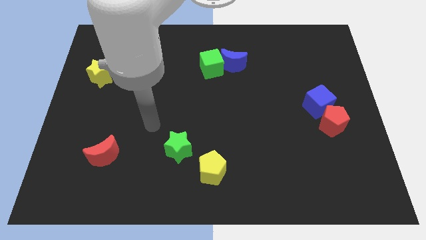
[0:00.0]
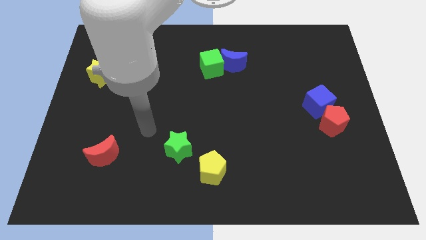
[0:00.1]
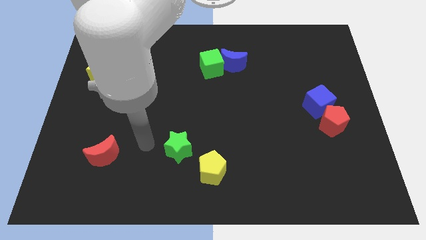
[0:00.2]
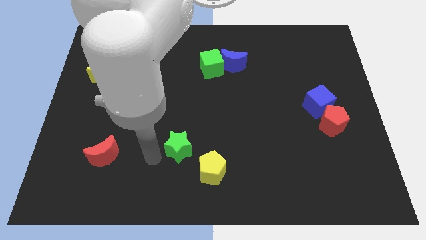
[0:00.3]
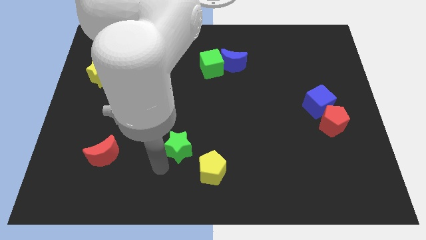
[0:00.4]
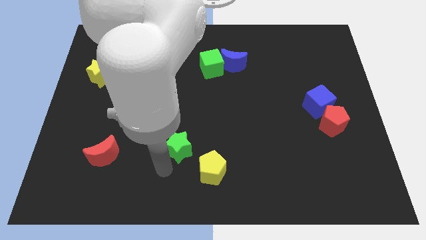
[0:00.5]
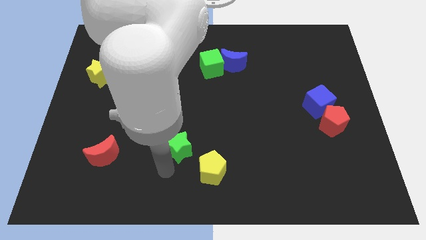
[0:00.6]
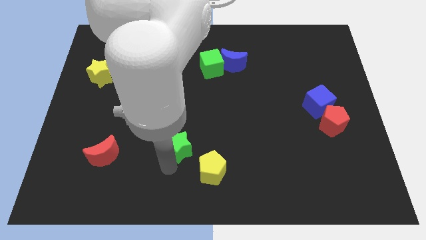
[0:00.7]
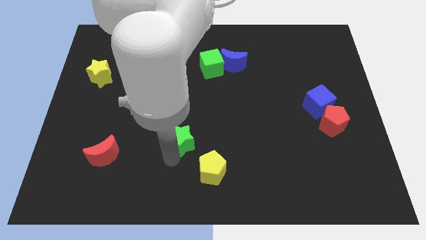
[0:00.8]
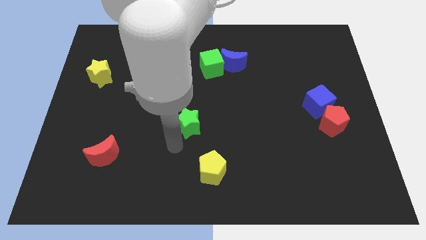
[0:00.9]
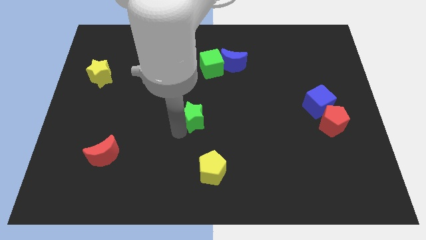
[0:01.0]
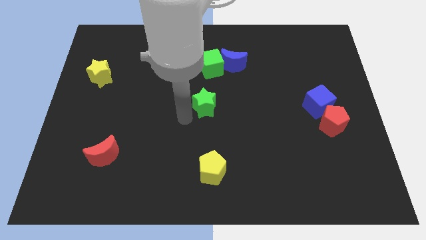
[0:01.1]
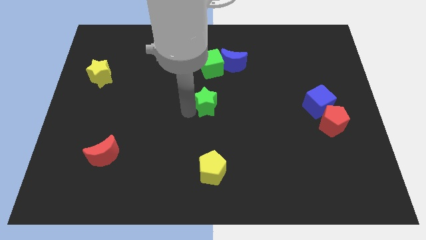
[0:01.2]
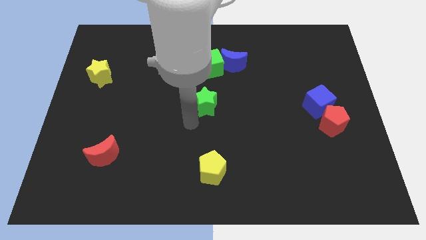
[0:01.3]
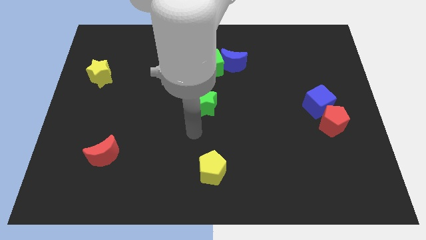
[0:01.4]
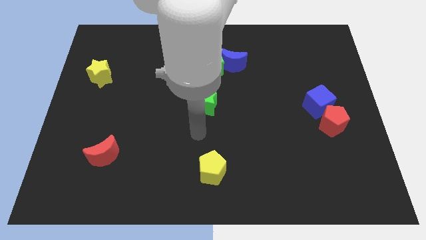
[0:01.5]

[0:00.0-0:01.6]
push the green star closer to the green cube

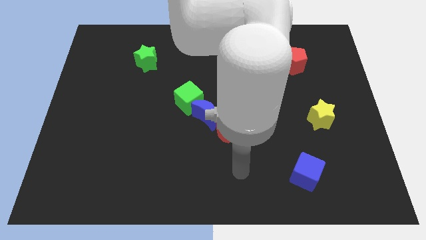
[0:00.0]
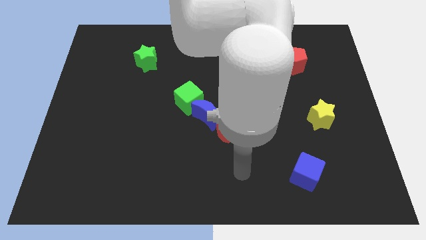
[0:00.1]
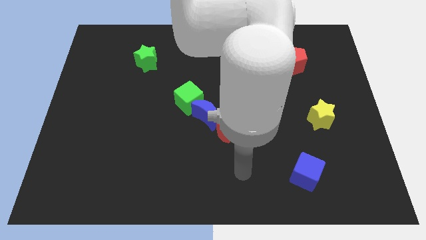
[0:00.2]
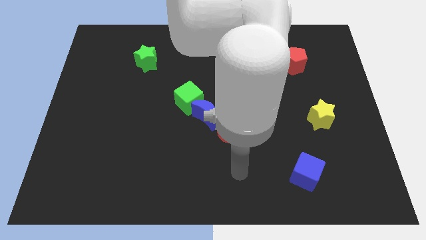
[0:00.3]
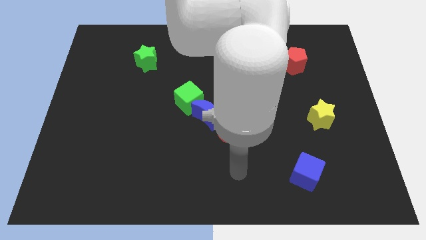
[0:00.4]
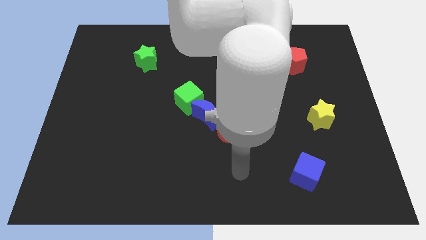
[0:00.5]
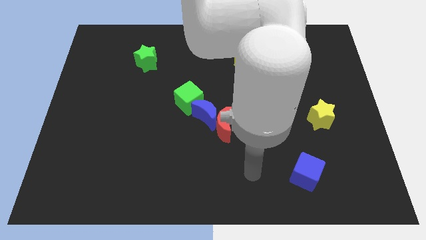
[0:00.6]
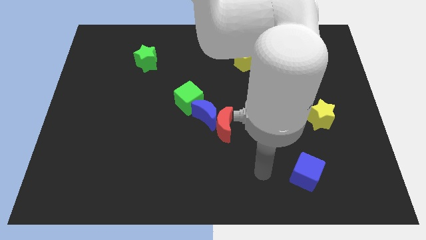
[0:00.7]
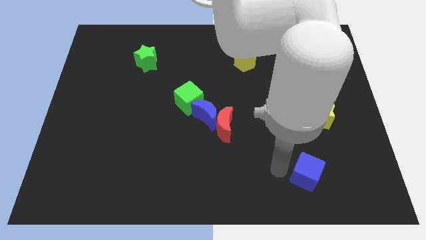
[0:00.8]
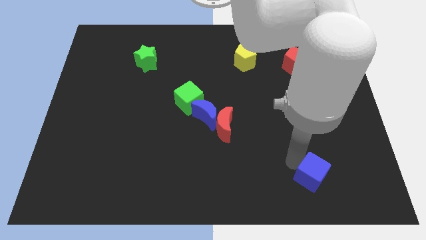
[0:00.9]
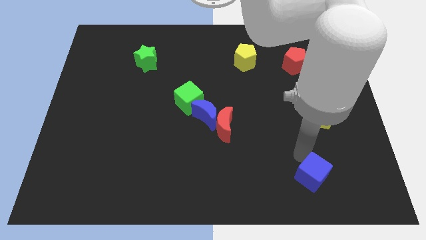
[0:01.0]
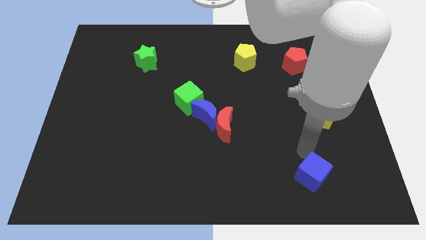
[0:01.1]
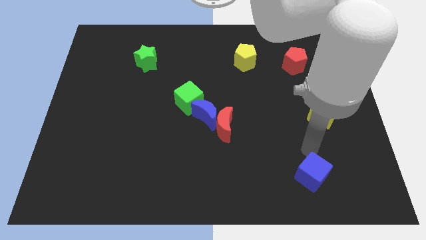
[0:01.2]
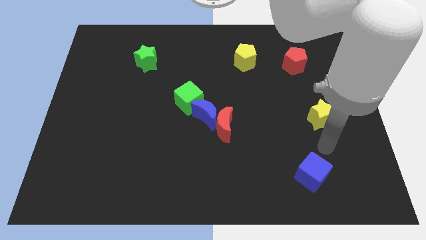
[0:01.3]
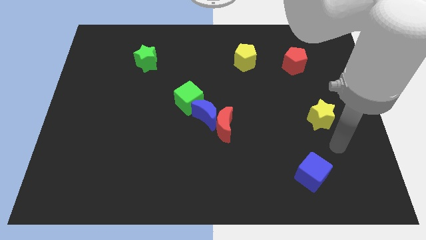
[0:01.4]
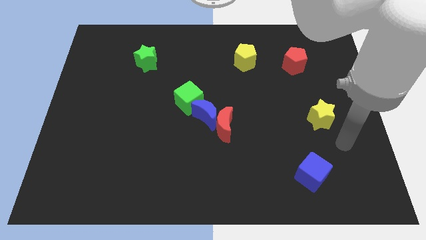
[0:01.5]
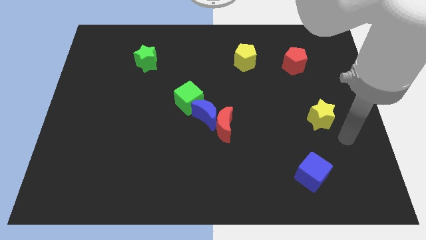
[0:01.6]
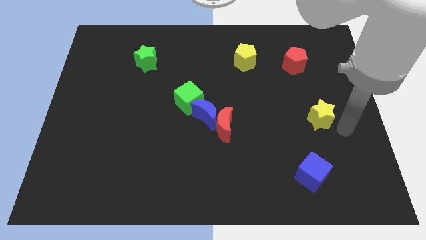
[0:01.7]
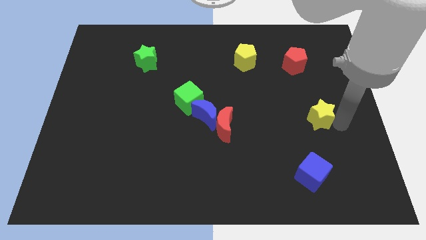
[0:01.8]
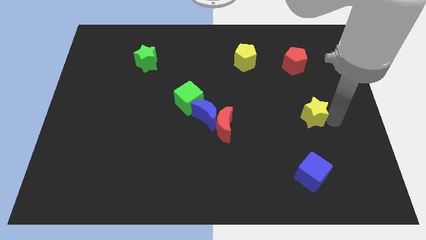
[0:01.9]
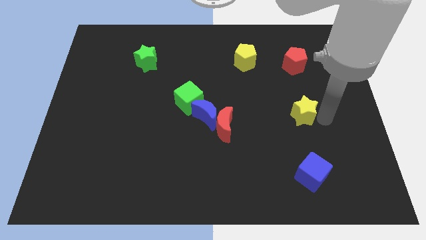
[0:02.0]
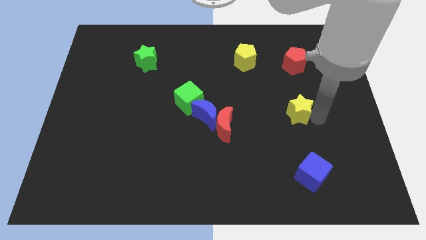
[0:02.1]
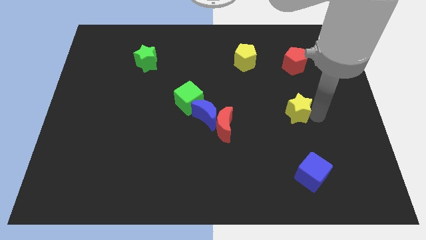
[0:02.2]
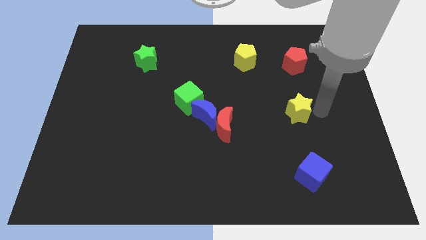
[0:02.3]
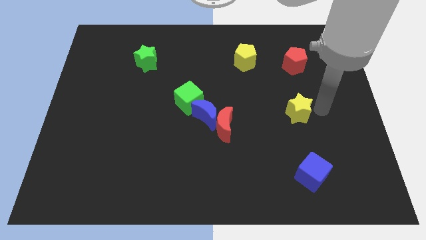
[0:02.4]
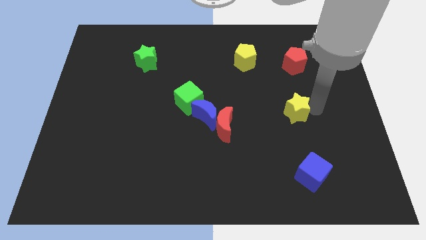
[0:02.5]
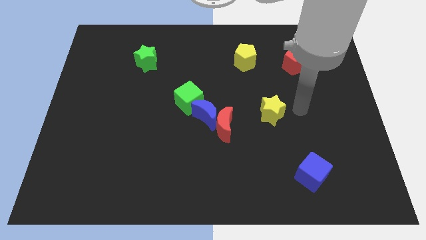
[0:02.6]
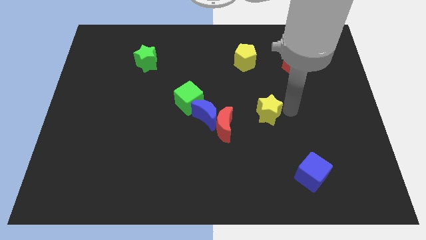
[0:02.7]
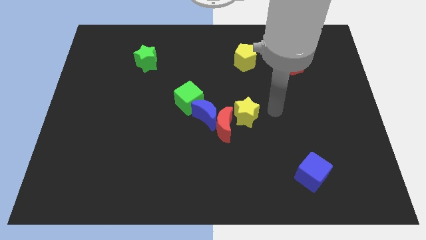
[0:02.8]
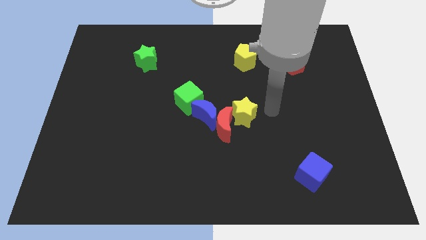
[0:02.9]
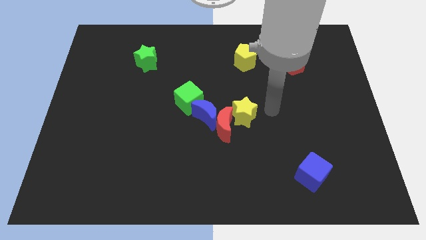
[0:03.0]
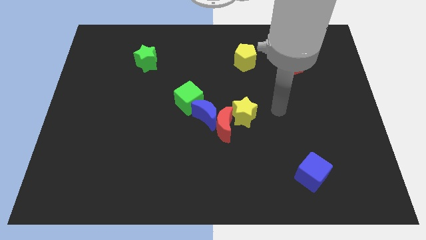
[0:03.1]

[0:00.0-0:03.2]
move the blue cube slightly towards right

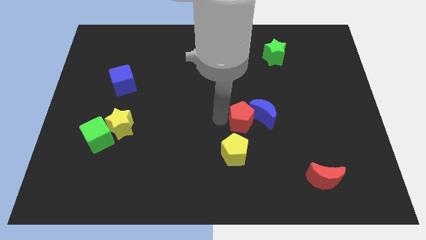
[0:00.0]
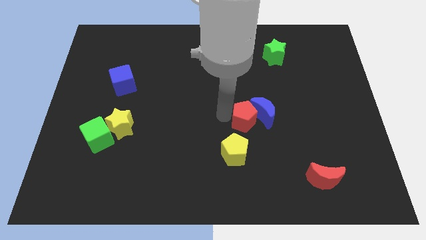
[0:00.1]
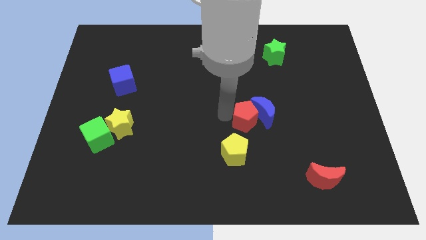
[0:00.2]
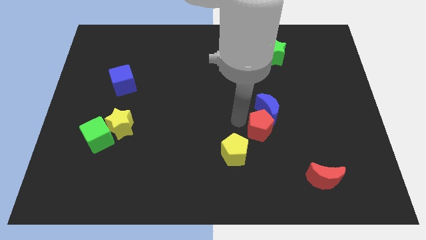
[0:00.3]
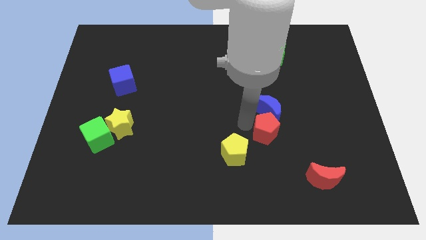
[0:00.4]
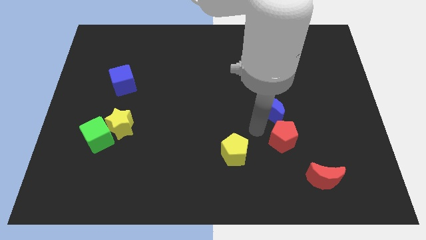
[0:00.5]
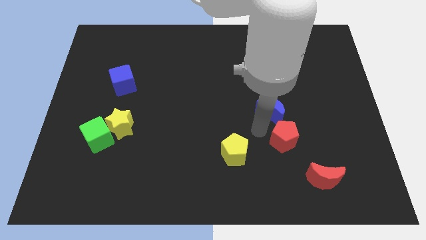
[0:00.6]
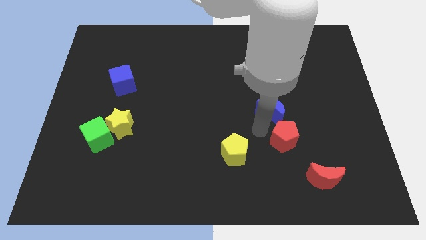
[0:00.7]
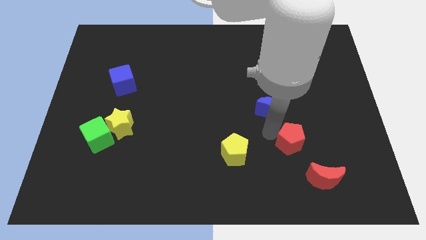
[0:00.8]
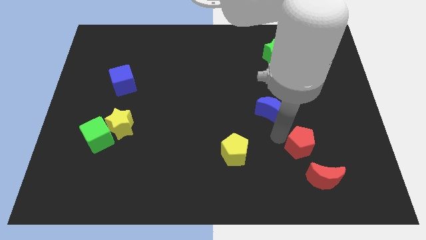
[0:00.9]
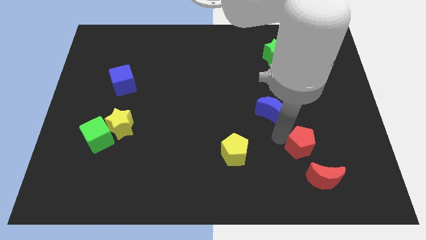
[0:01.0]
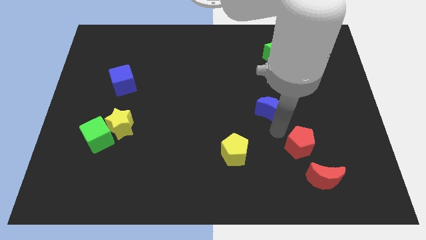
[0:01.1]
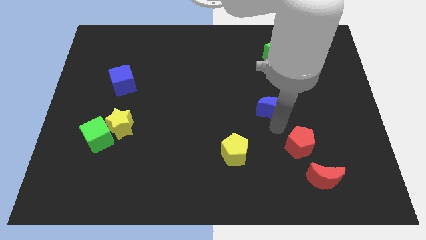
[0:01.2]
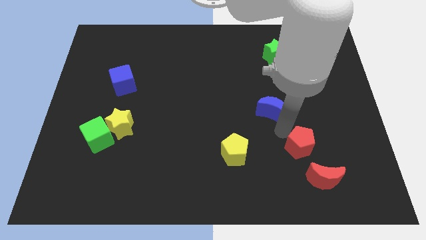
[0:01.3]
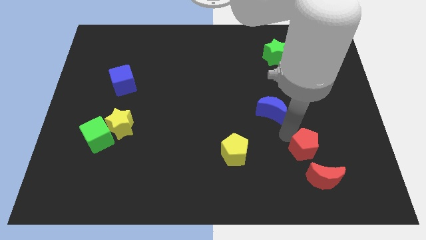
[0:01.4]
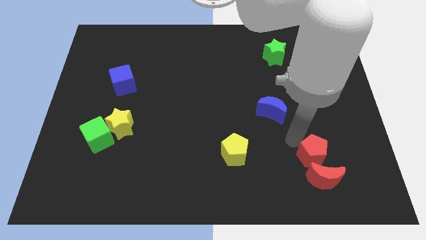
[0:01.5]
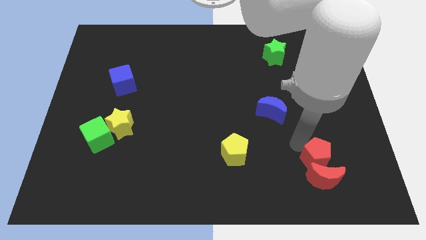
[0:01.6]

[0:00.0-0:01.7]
push the red crescent to the bottom of the red pentagon

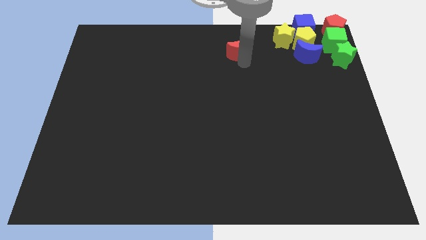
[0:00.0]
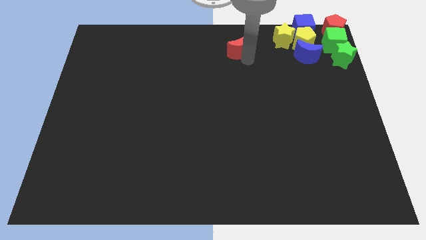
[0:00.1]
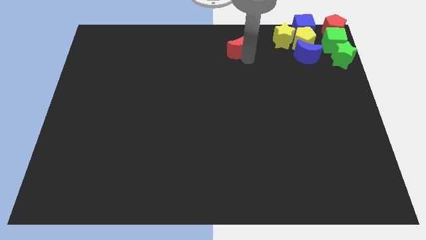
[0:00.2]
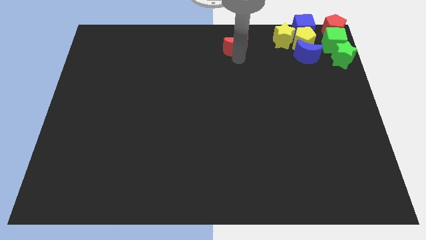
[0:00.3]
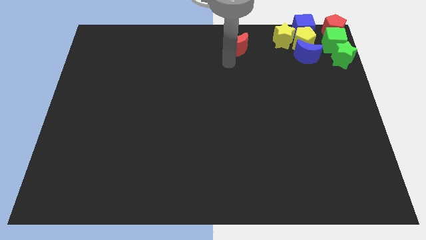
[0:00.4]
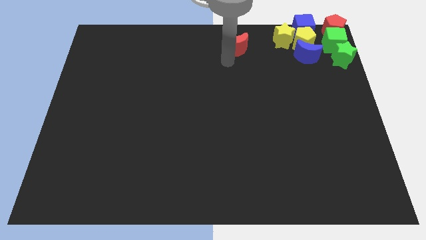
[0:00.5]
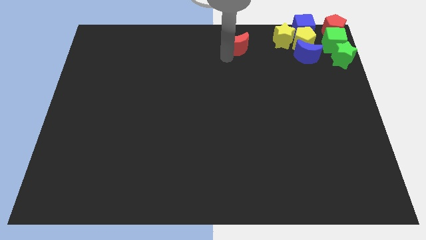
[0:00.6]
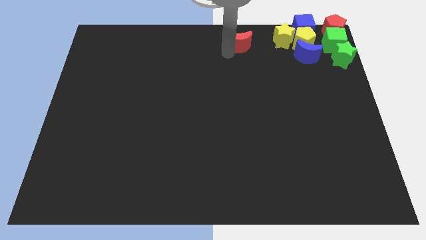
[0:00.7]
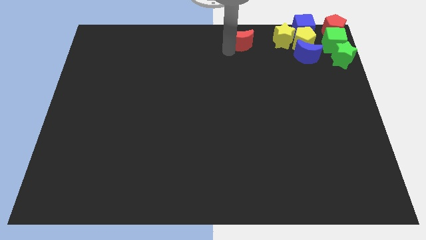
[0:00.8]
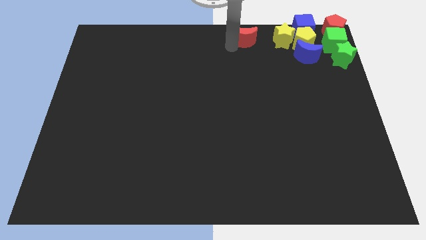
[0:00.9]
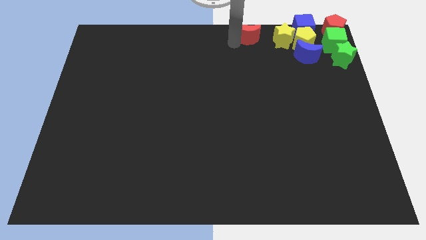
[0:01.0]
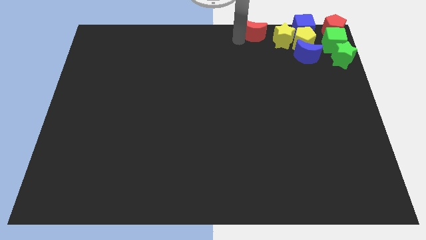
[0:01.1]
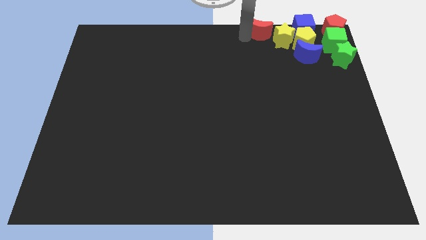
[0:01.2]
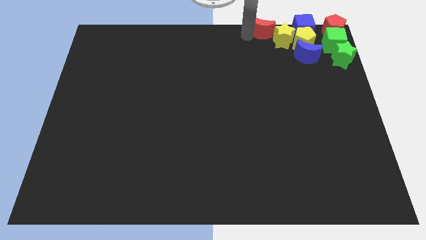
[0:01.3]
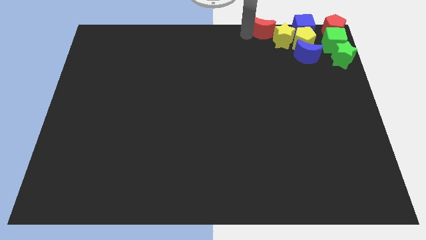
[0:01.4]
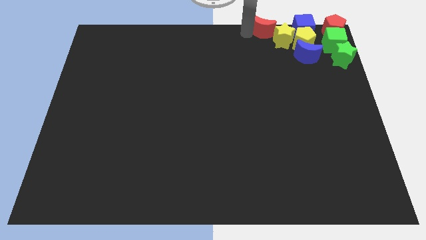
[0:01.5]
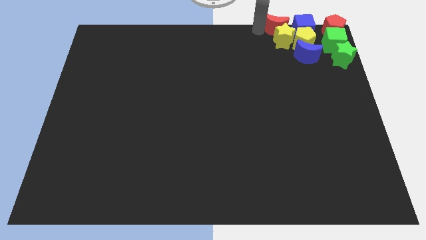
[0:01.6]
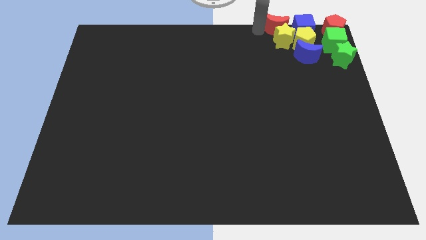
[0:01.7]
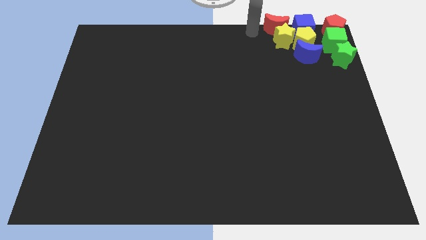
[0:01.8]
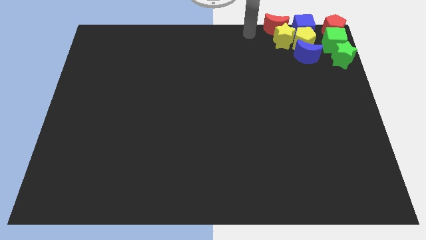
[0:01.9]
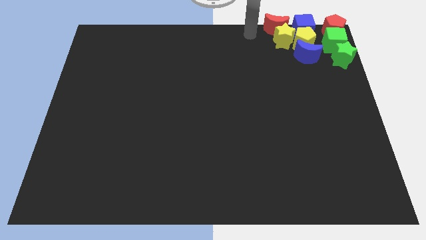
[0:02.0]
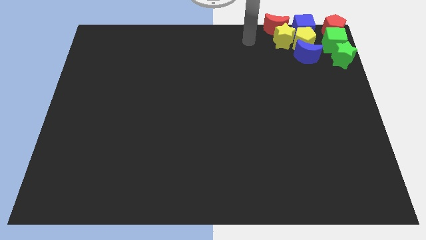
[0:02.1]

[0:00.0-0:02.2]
drag the red moon to the top of the yellow pentagon to form a group of blocks

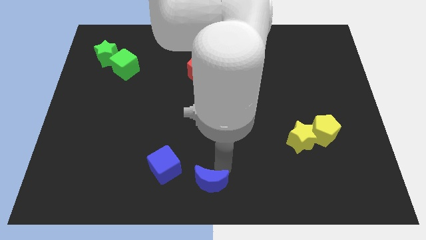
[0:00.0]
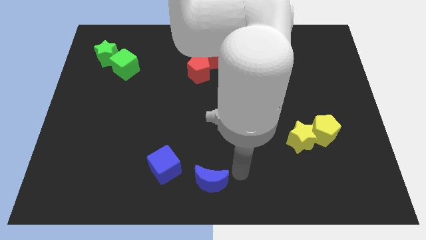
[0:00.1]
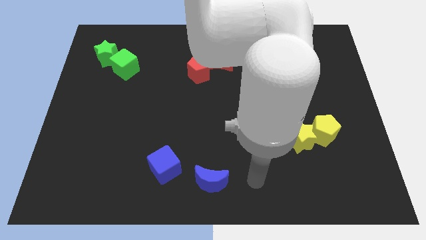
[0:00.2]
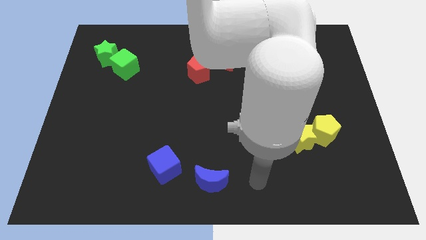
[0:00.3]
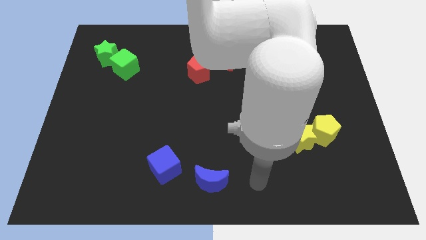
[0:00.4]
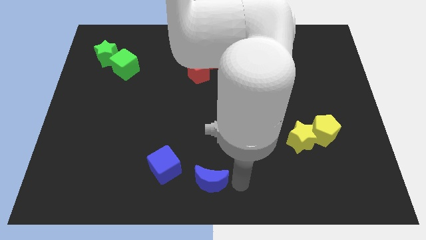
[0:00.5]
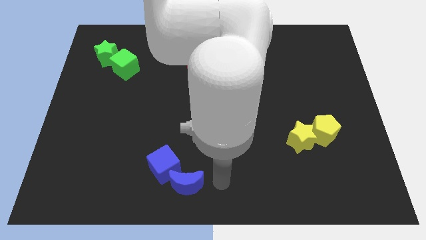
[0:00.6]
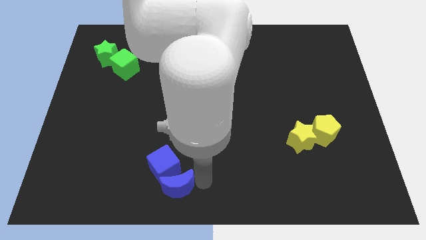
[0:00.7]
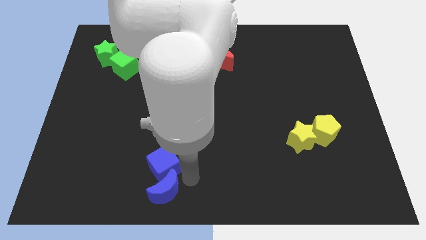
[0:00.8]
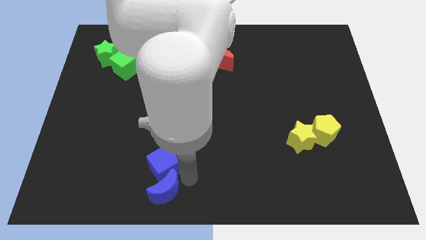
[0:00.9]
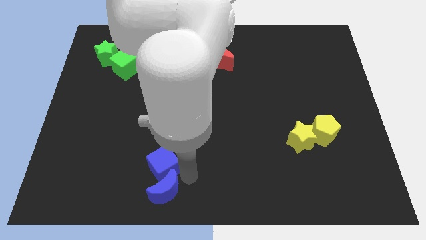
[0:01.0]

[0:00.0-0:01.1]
move blue moon into blue cube
